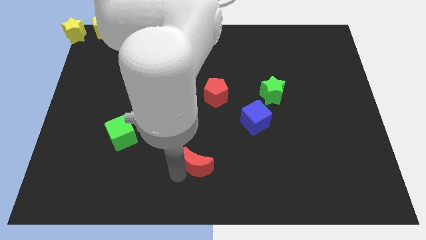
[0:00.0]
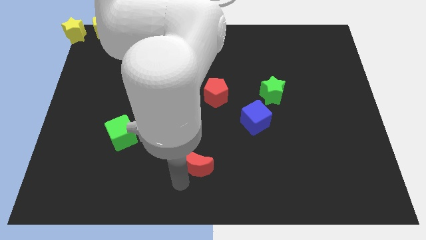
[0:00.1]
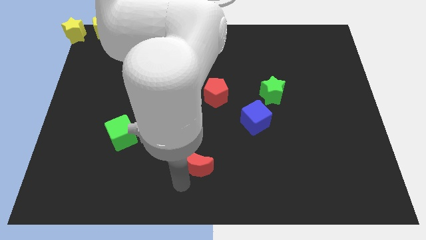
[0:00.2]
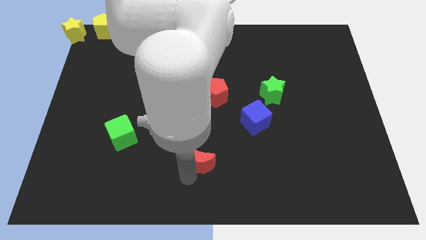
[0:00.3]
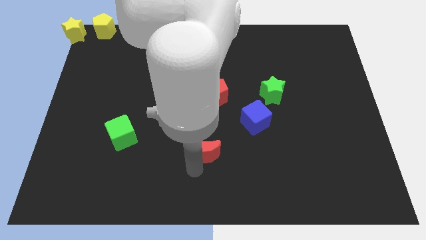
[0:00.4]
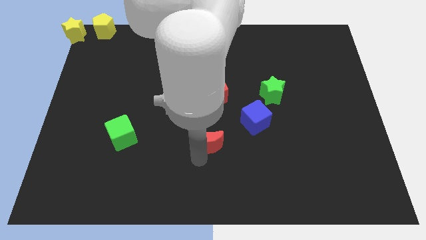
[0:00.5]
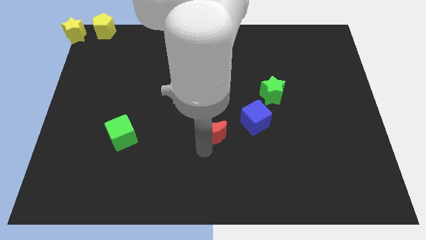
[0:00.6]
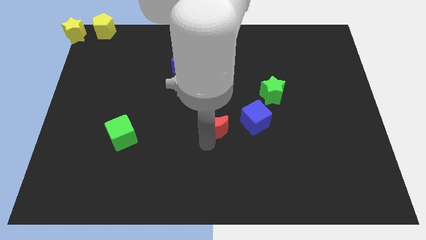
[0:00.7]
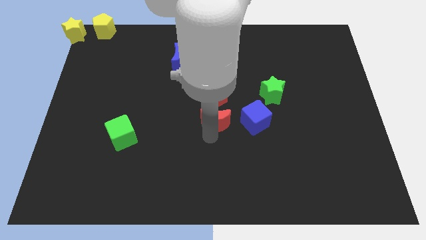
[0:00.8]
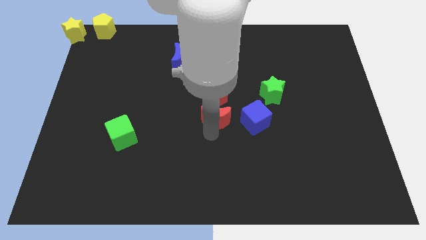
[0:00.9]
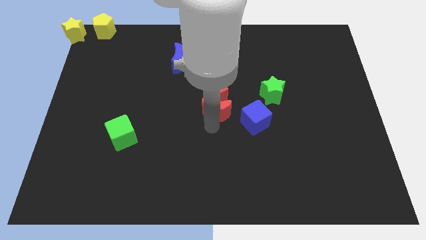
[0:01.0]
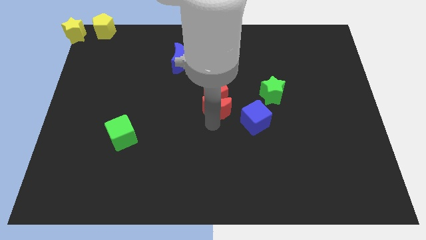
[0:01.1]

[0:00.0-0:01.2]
place the red moon at the center of the board

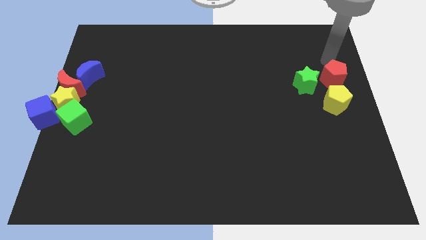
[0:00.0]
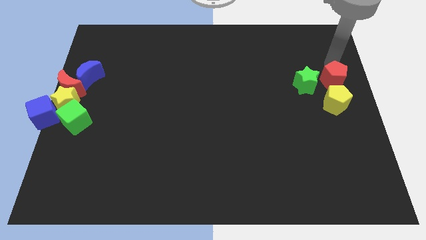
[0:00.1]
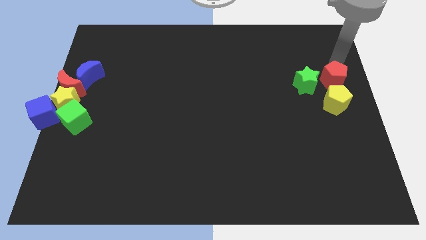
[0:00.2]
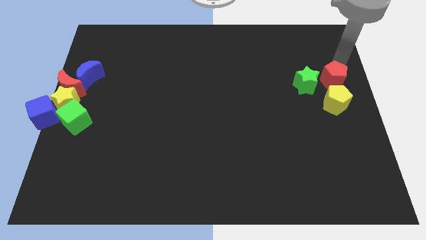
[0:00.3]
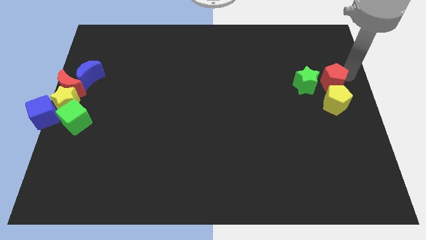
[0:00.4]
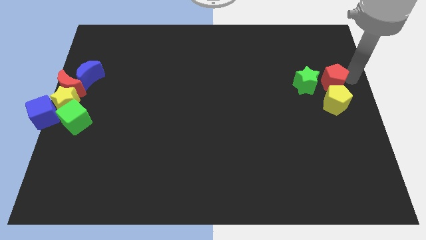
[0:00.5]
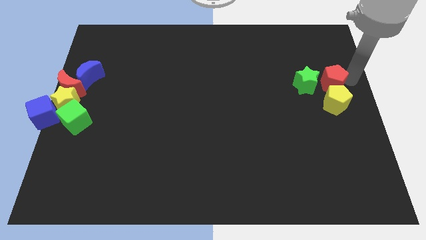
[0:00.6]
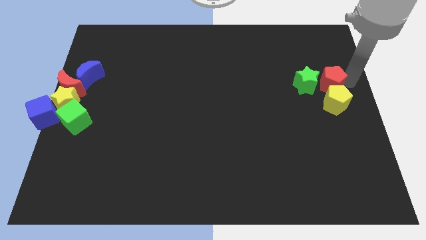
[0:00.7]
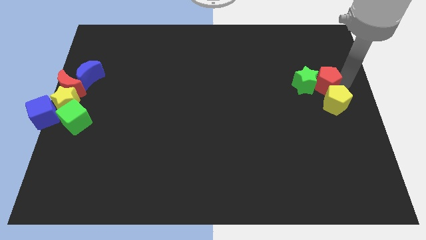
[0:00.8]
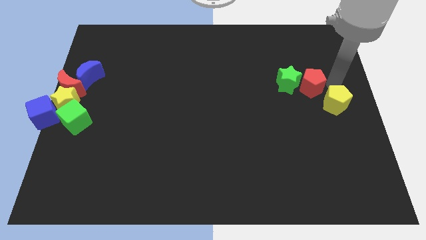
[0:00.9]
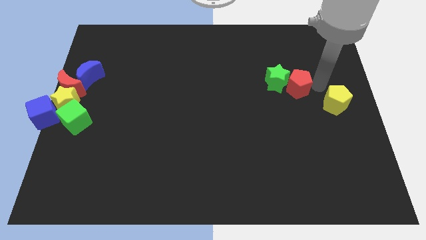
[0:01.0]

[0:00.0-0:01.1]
move the red pentagon to the right side of the green star

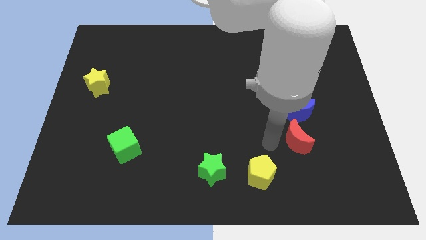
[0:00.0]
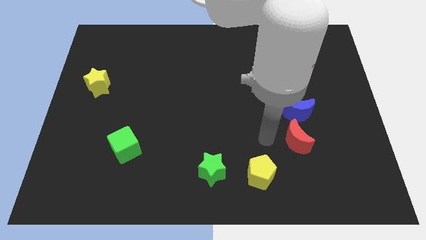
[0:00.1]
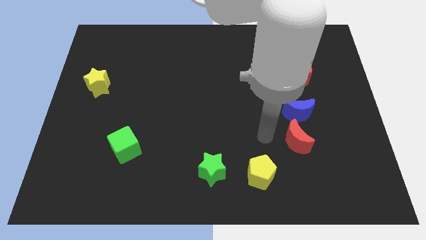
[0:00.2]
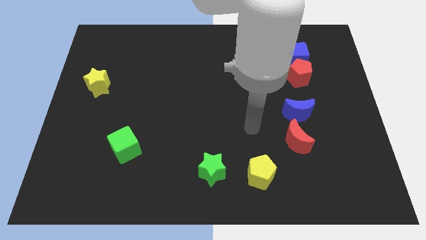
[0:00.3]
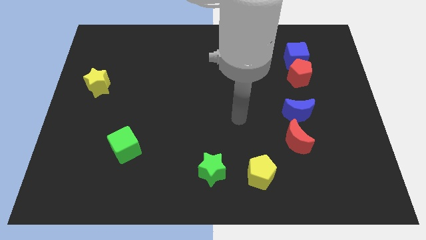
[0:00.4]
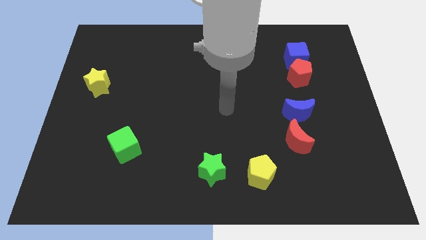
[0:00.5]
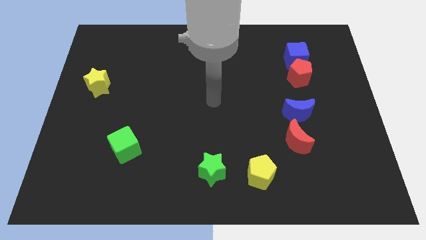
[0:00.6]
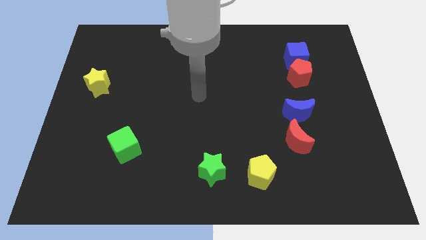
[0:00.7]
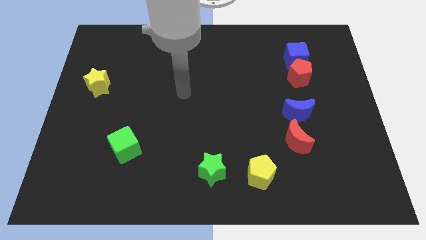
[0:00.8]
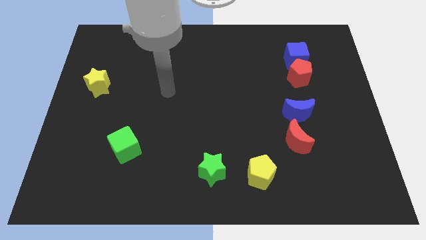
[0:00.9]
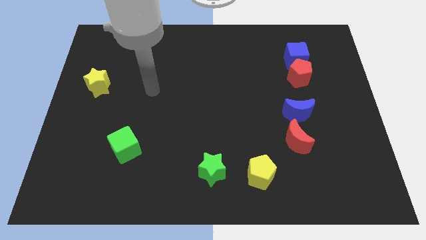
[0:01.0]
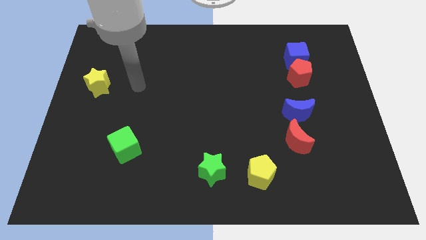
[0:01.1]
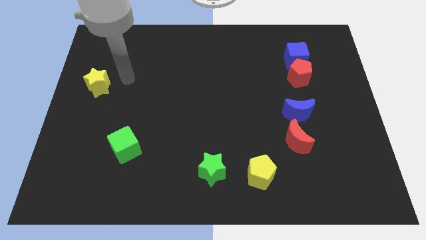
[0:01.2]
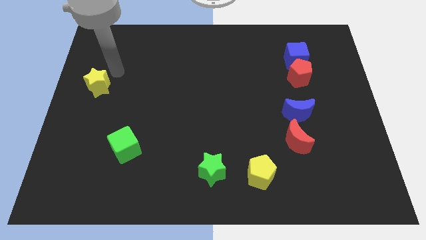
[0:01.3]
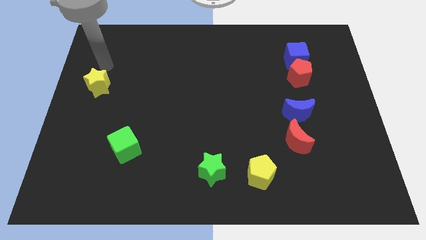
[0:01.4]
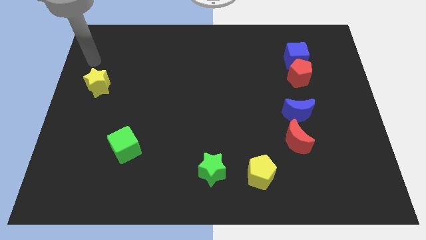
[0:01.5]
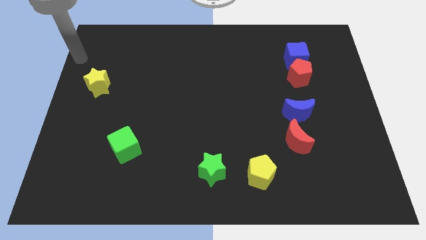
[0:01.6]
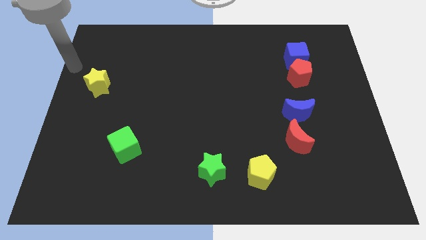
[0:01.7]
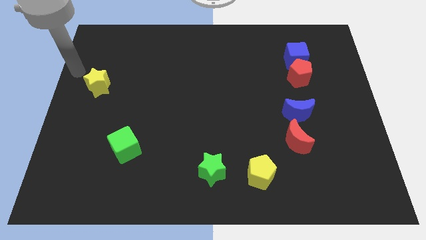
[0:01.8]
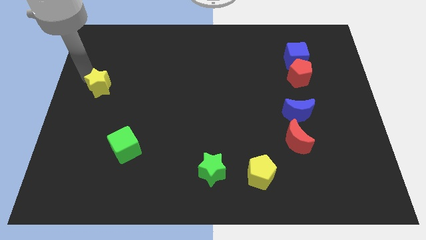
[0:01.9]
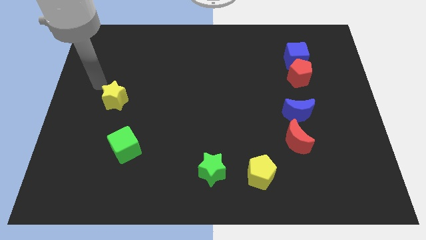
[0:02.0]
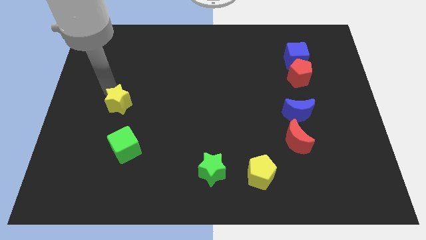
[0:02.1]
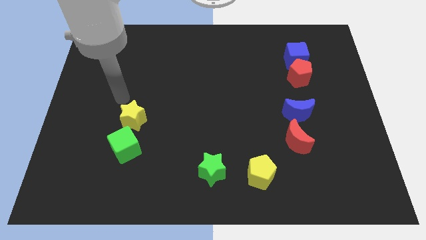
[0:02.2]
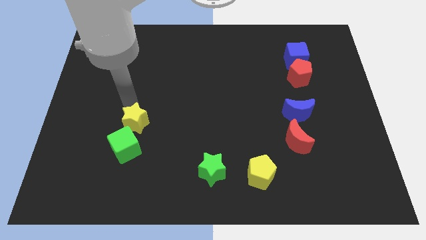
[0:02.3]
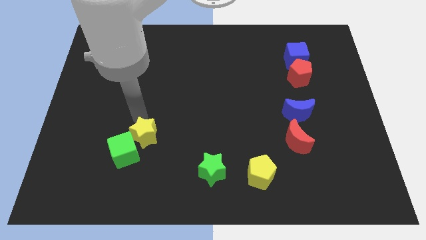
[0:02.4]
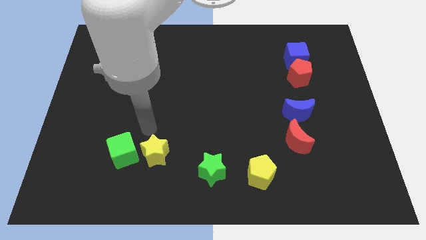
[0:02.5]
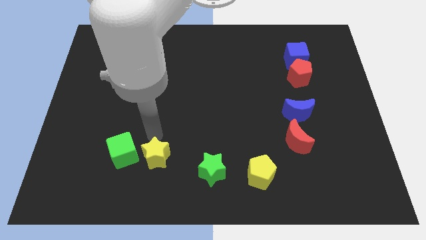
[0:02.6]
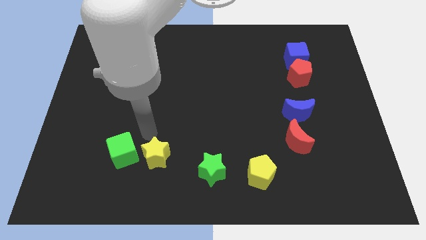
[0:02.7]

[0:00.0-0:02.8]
place the yellow star to the right of the green cube

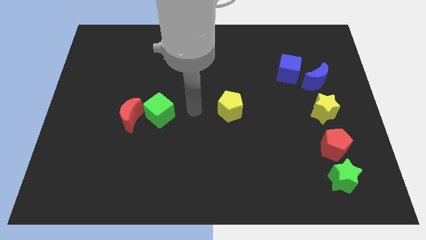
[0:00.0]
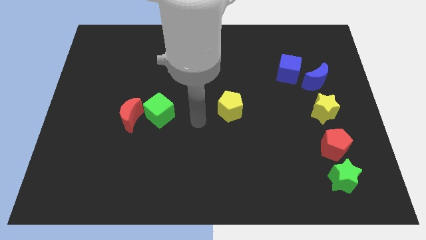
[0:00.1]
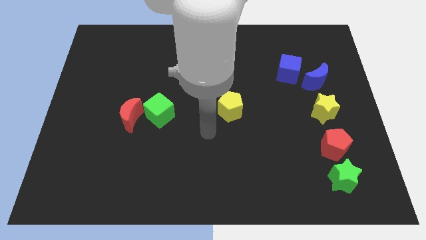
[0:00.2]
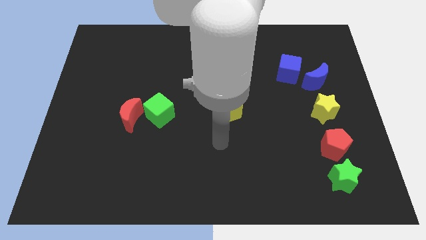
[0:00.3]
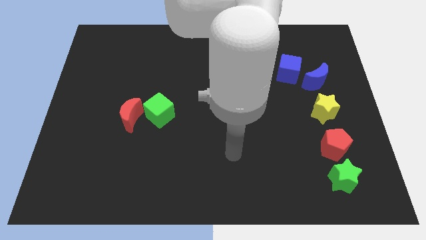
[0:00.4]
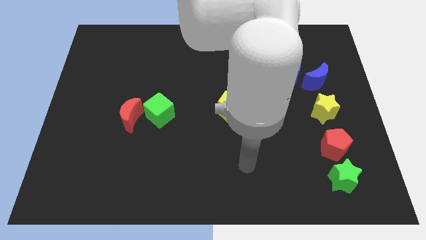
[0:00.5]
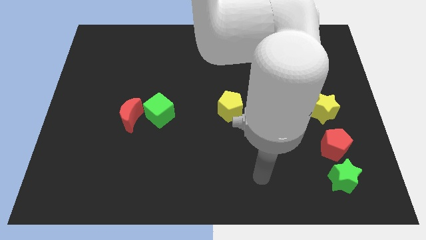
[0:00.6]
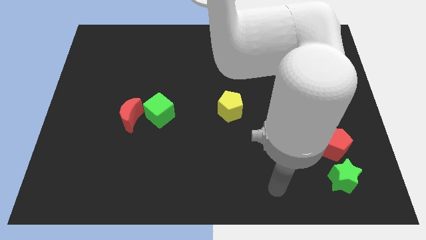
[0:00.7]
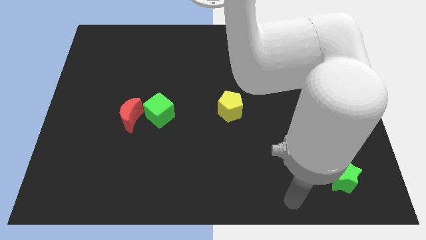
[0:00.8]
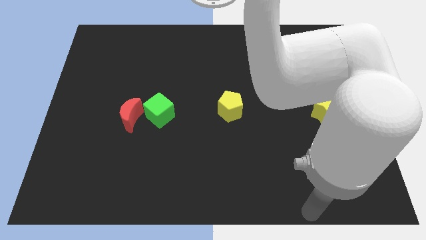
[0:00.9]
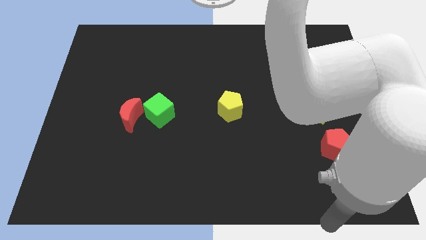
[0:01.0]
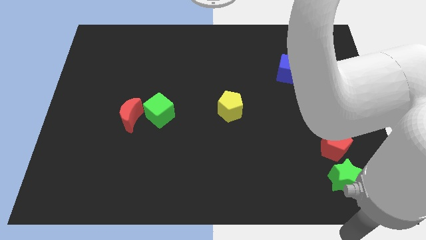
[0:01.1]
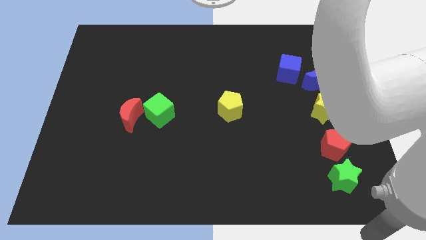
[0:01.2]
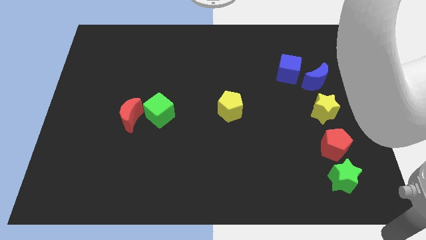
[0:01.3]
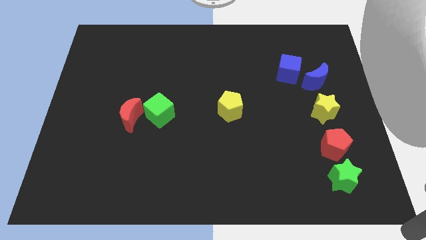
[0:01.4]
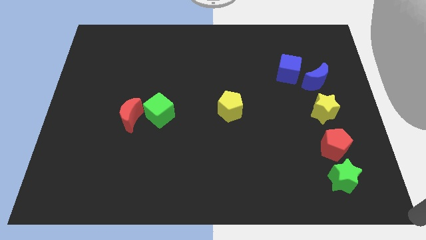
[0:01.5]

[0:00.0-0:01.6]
move away from the middle of yellow pentagon and green cube

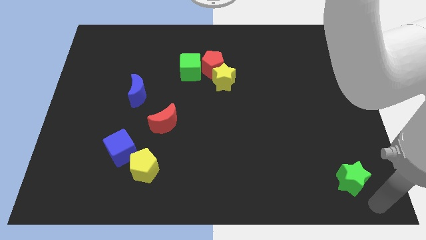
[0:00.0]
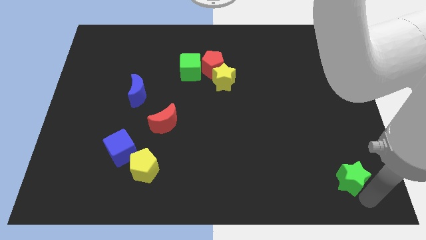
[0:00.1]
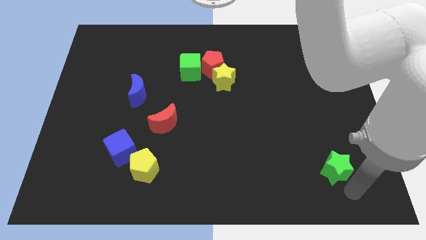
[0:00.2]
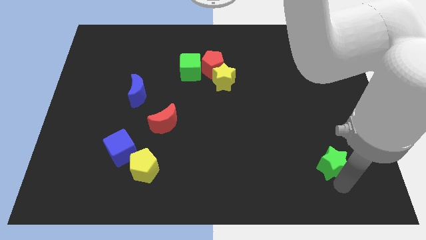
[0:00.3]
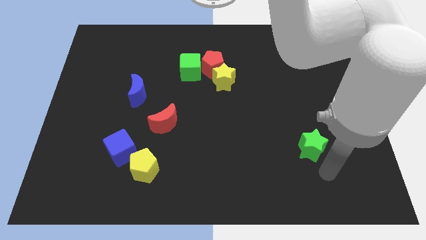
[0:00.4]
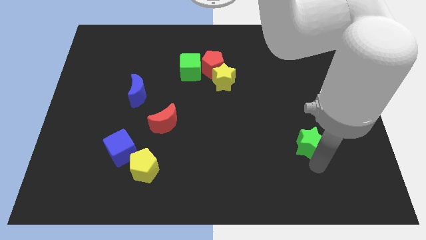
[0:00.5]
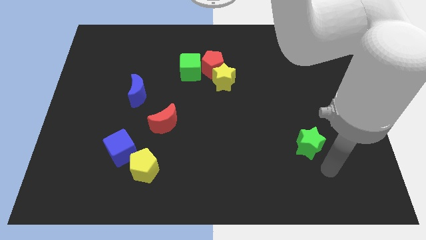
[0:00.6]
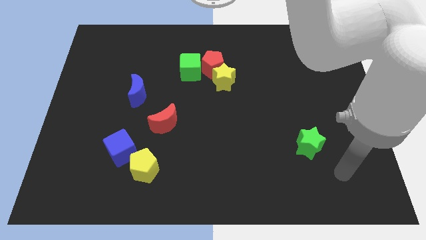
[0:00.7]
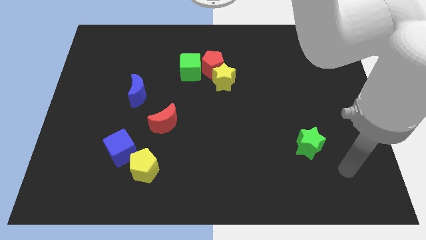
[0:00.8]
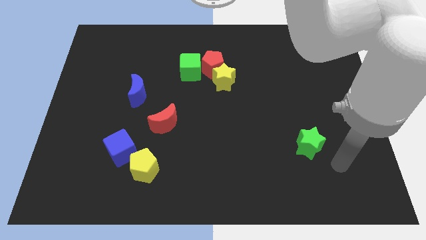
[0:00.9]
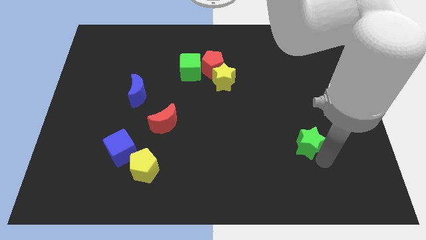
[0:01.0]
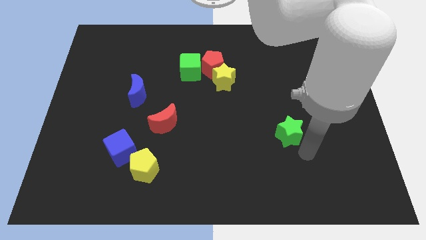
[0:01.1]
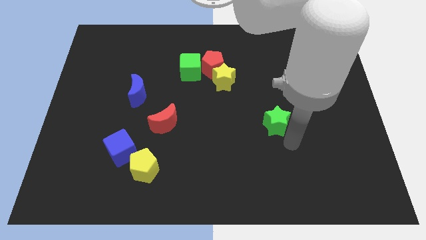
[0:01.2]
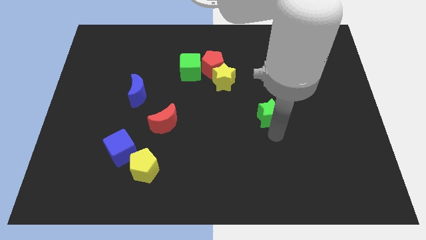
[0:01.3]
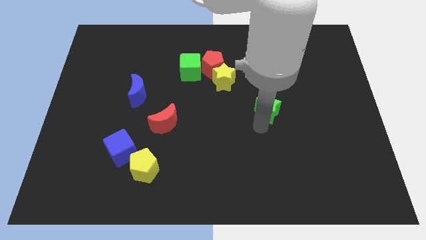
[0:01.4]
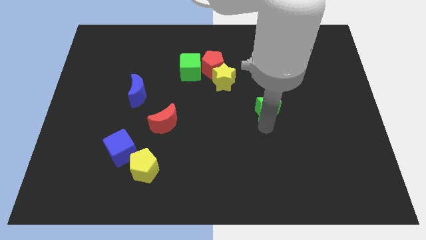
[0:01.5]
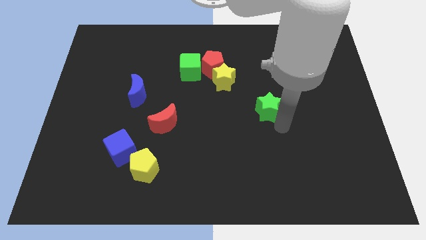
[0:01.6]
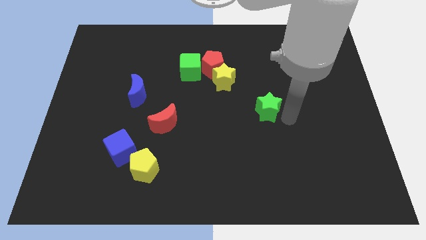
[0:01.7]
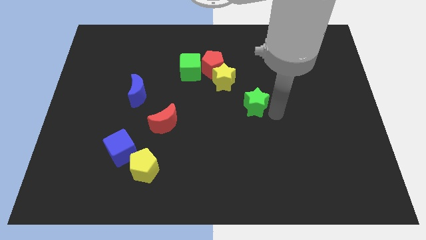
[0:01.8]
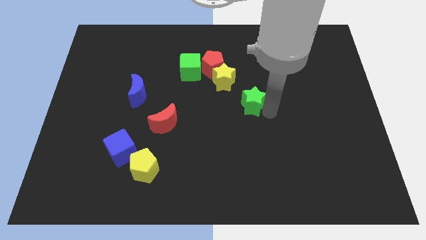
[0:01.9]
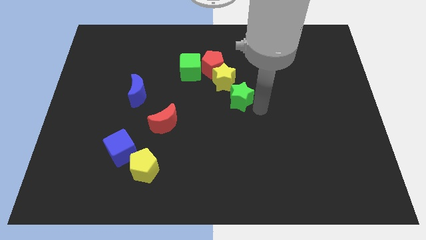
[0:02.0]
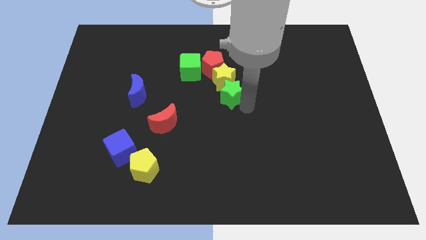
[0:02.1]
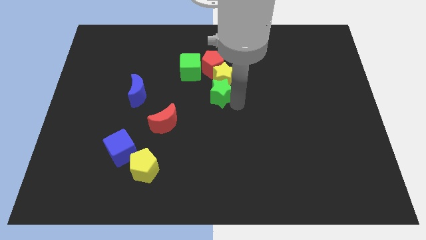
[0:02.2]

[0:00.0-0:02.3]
slide the green star towards the bottom side of the yellow star
